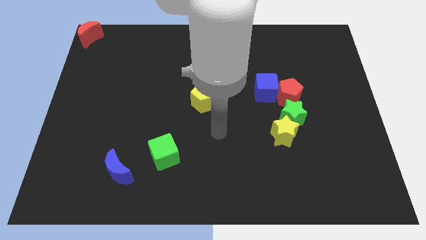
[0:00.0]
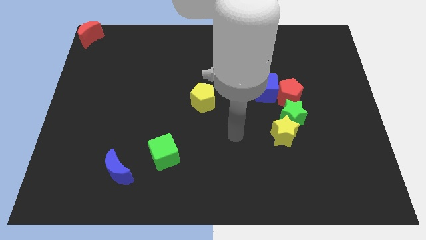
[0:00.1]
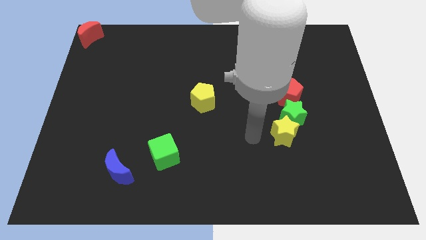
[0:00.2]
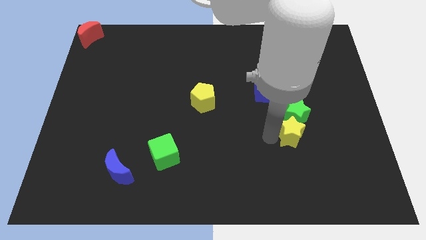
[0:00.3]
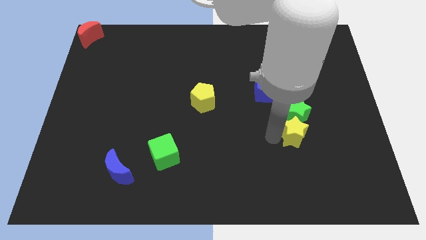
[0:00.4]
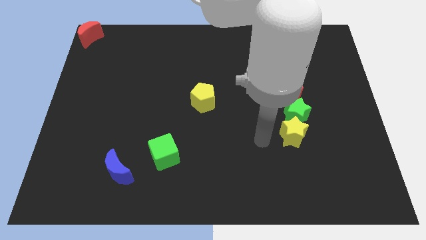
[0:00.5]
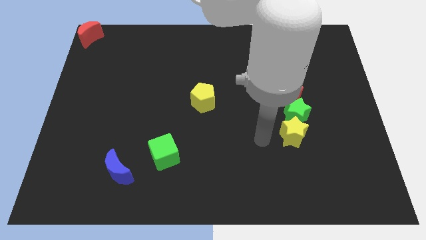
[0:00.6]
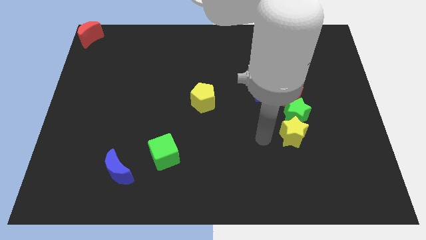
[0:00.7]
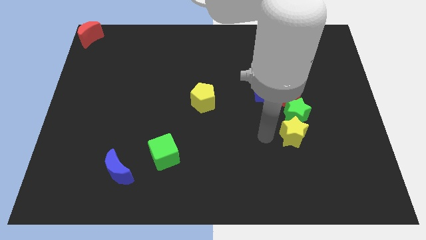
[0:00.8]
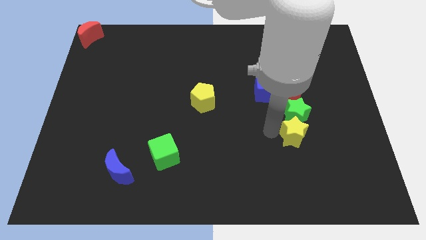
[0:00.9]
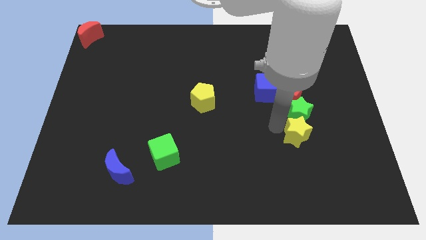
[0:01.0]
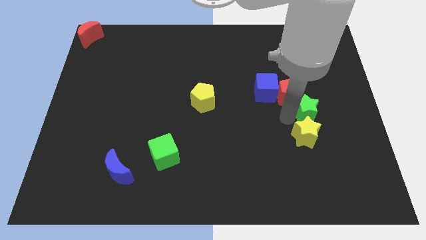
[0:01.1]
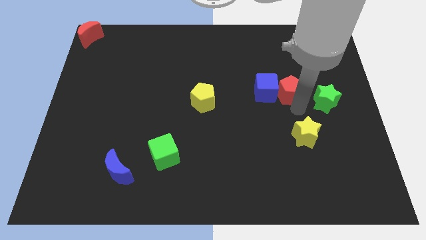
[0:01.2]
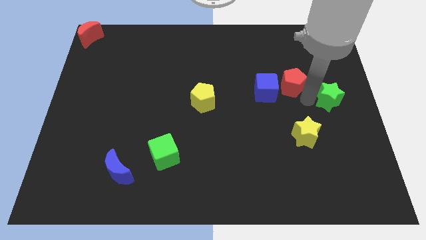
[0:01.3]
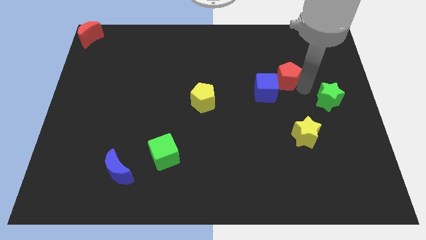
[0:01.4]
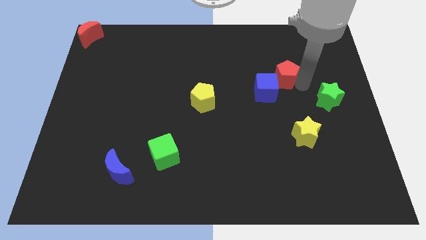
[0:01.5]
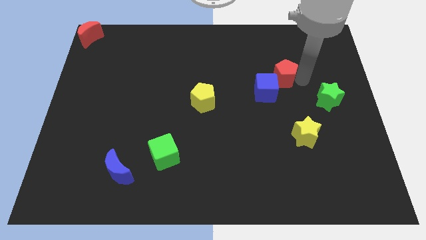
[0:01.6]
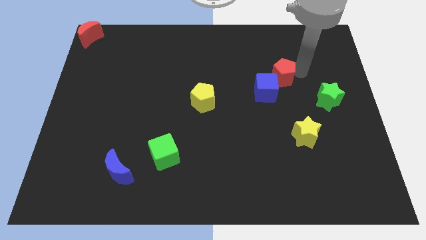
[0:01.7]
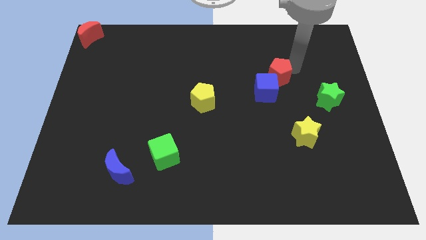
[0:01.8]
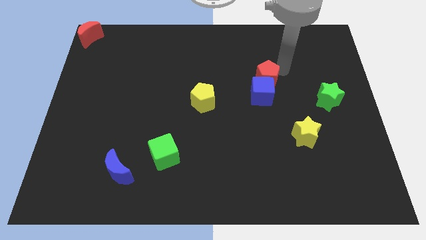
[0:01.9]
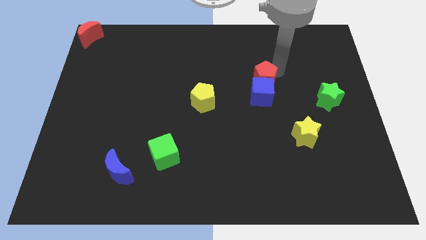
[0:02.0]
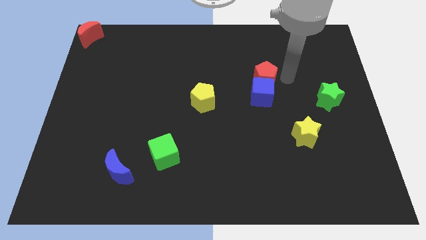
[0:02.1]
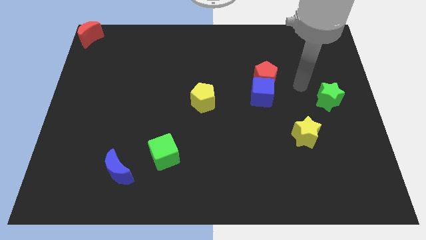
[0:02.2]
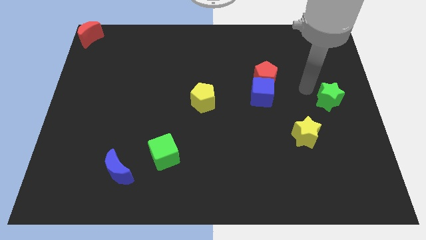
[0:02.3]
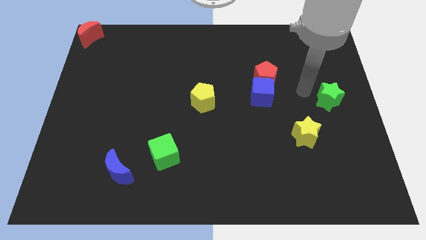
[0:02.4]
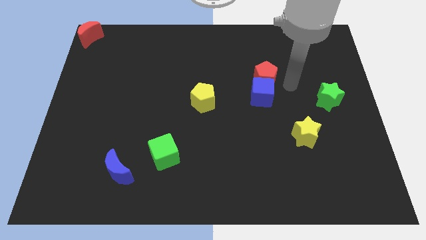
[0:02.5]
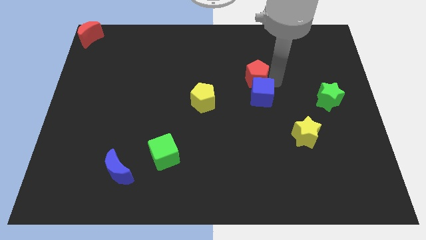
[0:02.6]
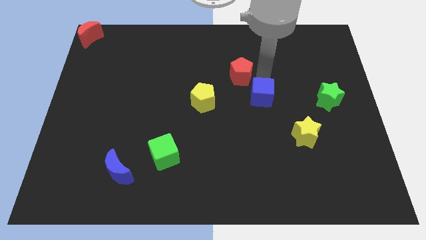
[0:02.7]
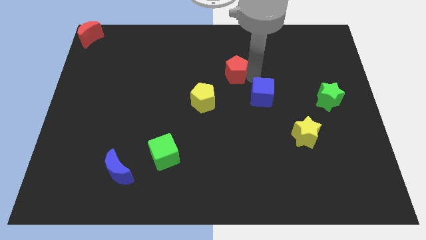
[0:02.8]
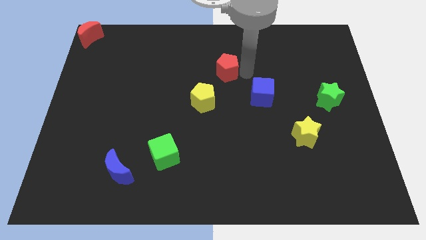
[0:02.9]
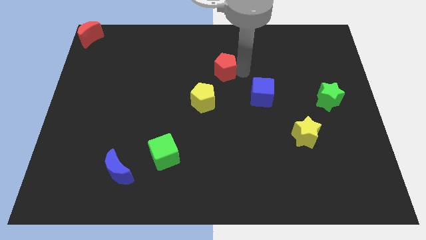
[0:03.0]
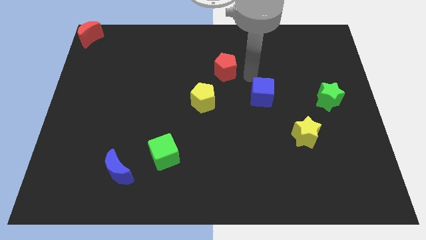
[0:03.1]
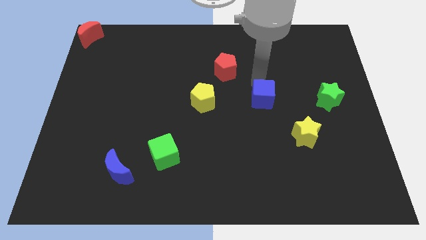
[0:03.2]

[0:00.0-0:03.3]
place the red pentagon above the yellow pentagon and the blue cube to form a triangle

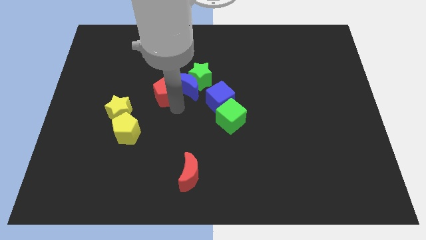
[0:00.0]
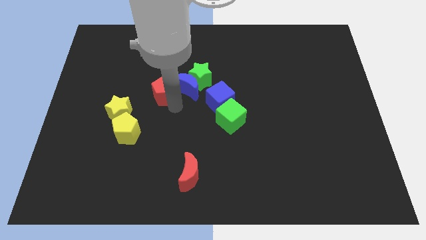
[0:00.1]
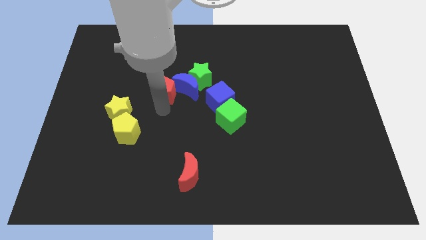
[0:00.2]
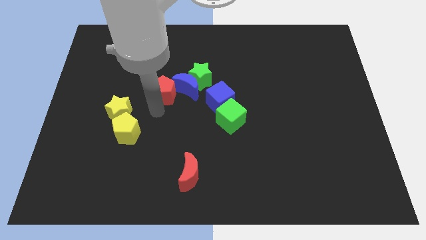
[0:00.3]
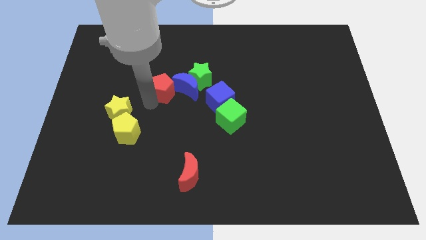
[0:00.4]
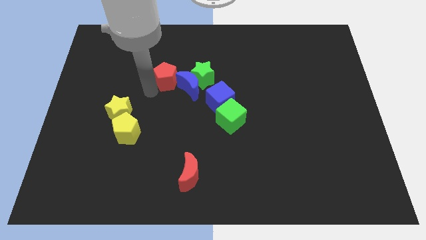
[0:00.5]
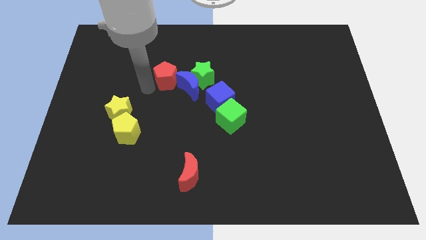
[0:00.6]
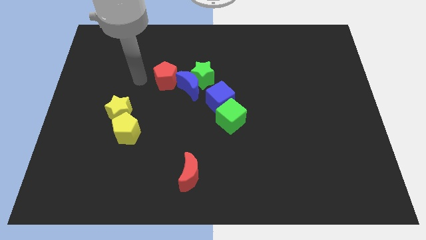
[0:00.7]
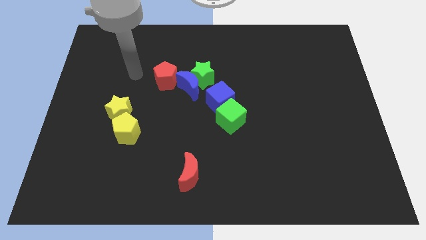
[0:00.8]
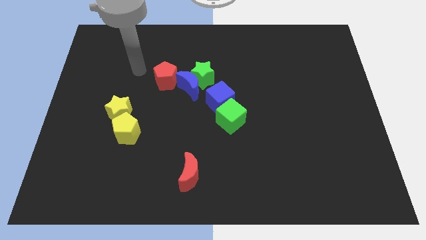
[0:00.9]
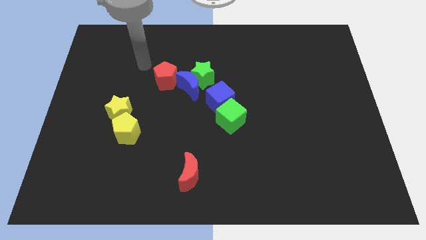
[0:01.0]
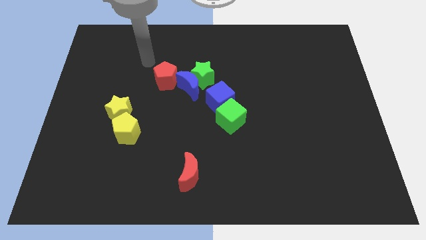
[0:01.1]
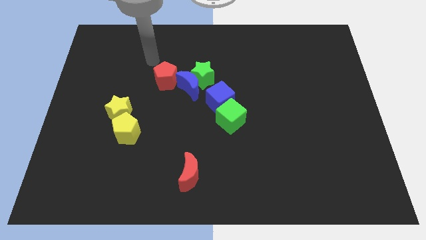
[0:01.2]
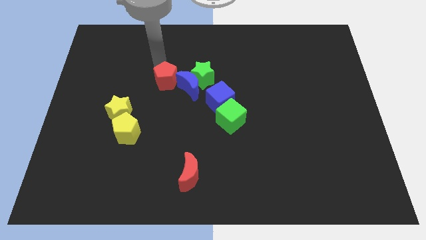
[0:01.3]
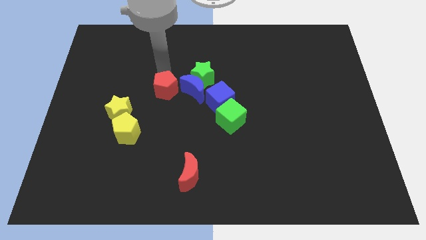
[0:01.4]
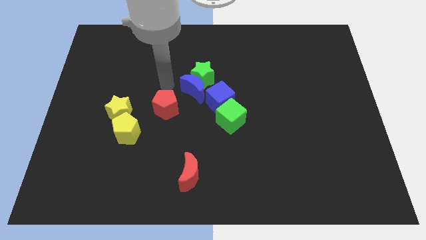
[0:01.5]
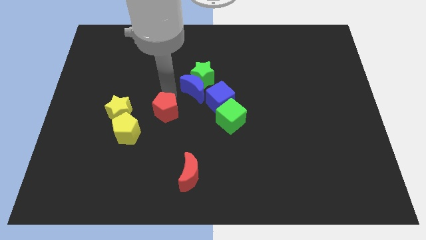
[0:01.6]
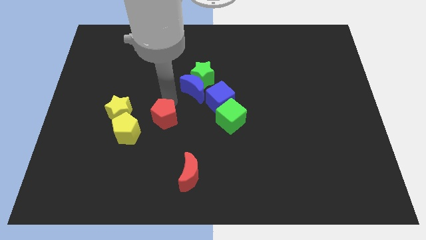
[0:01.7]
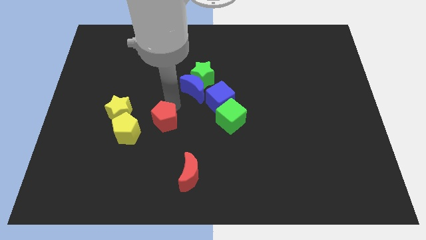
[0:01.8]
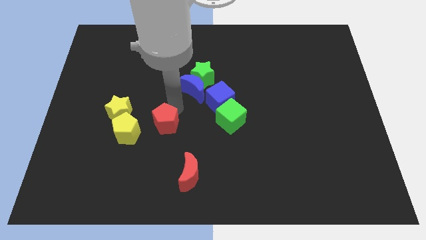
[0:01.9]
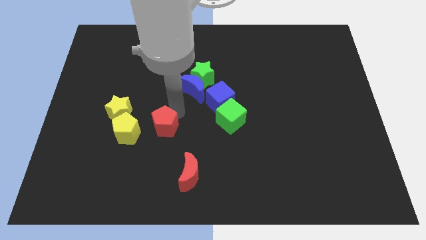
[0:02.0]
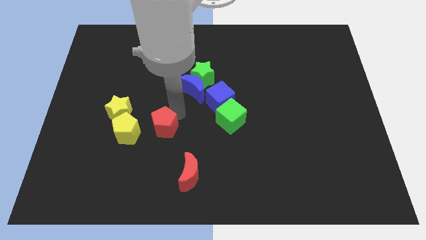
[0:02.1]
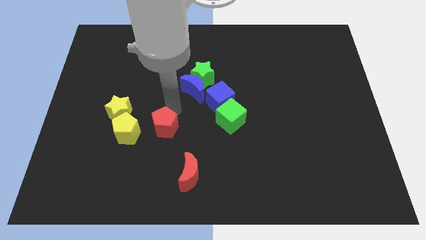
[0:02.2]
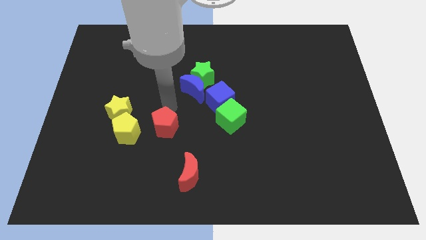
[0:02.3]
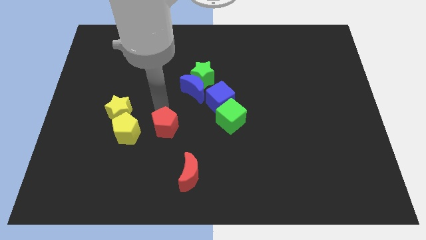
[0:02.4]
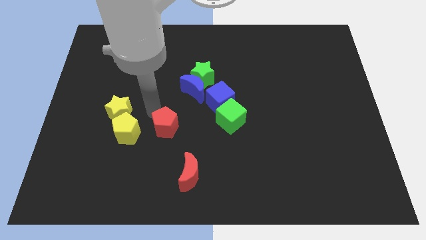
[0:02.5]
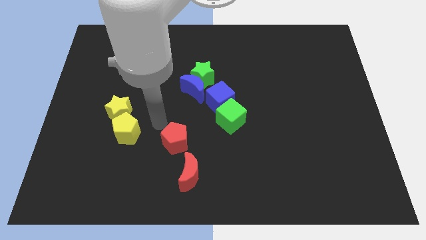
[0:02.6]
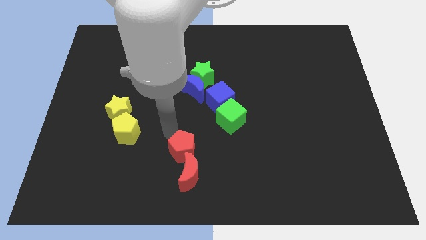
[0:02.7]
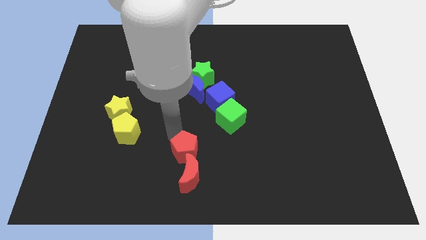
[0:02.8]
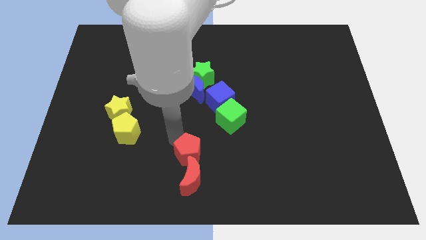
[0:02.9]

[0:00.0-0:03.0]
attach the red pentagon to the red moon

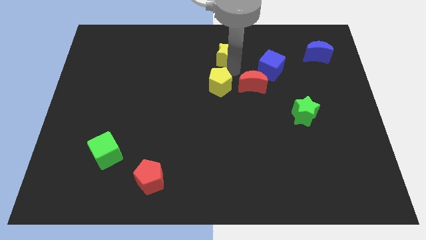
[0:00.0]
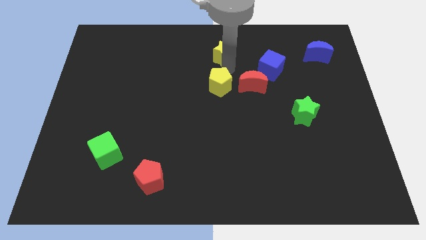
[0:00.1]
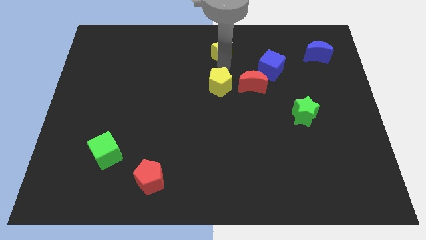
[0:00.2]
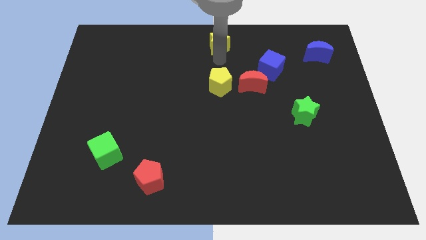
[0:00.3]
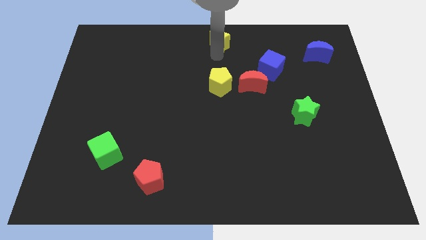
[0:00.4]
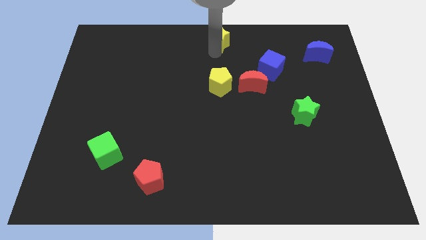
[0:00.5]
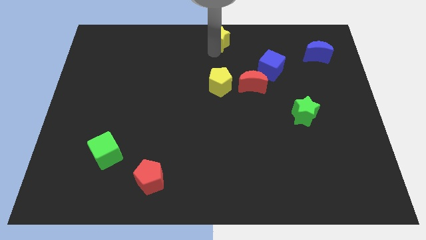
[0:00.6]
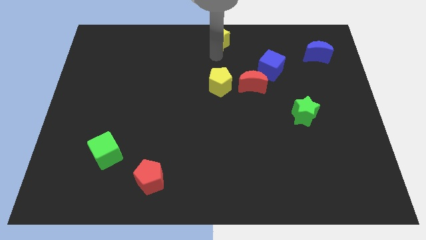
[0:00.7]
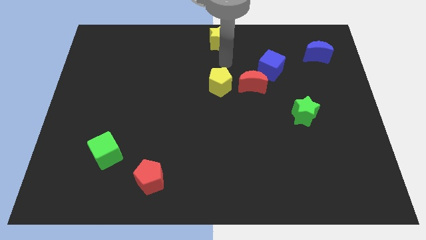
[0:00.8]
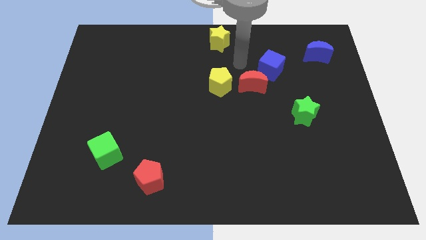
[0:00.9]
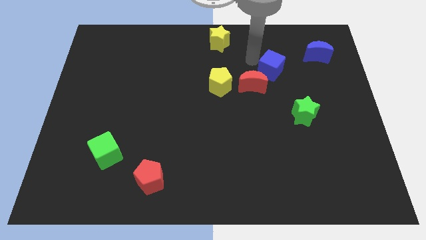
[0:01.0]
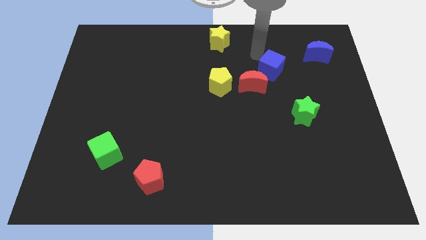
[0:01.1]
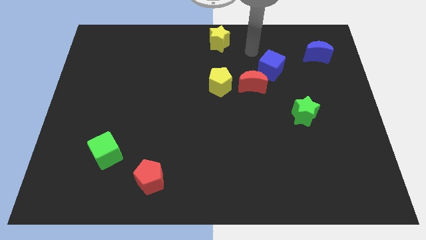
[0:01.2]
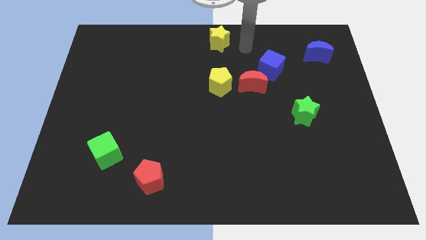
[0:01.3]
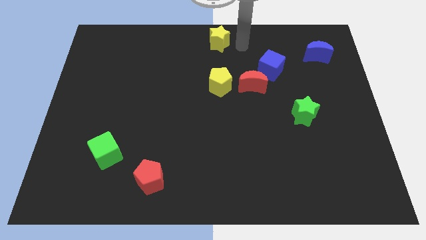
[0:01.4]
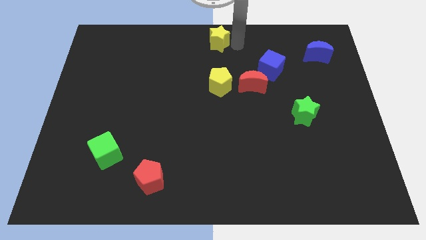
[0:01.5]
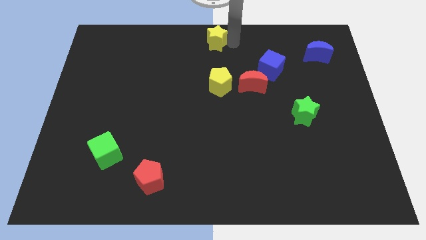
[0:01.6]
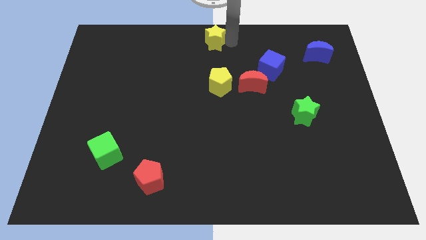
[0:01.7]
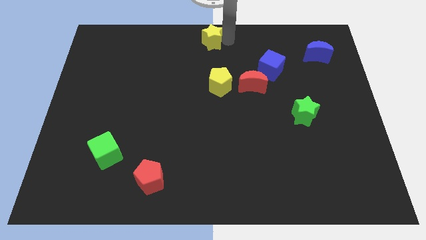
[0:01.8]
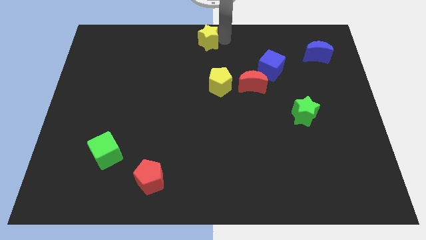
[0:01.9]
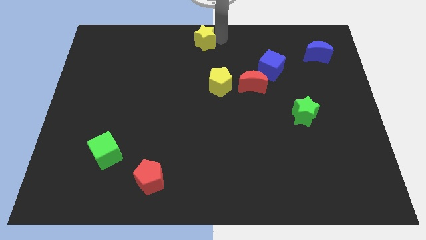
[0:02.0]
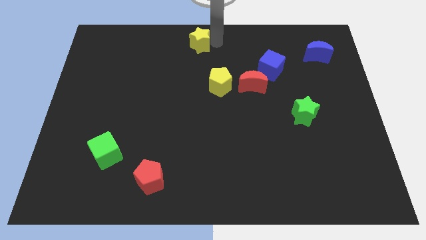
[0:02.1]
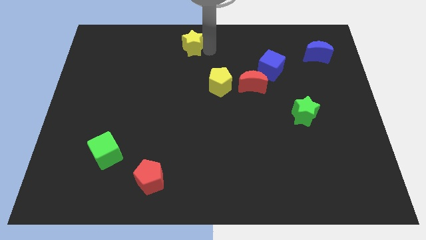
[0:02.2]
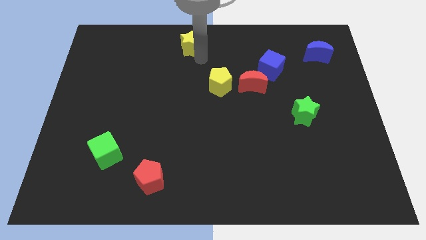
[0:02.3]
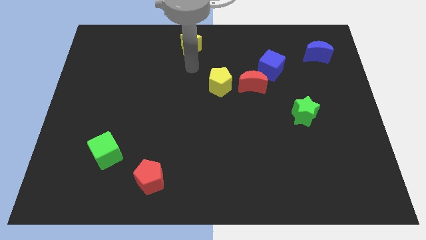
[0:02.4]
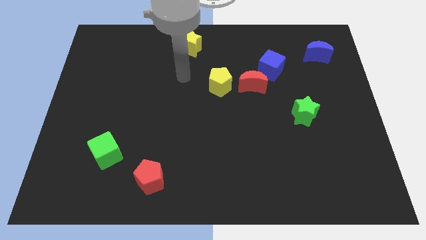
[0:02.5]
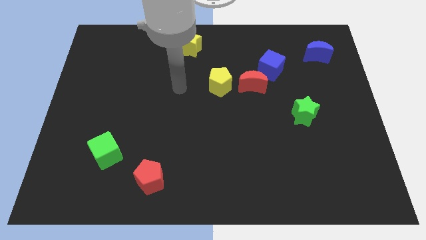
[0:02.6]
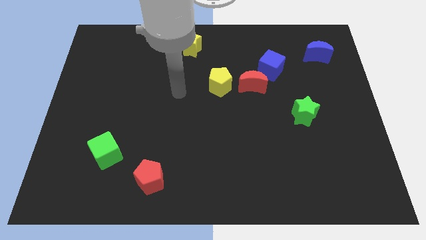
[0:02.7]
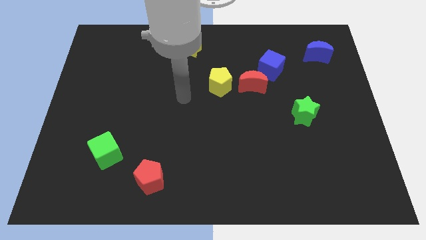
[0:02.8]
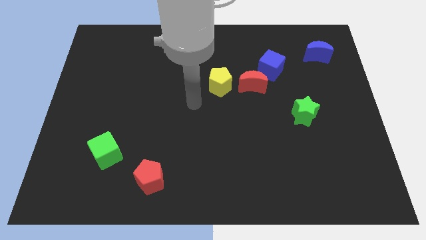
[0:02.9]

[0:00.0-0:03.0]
push yellow star to the top
